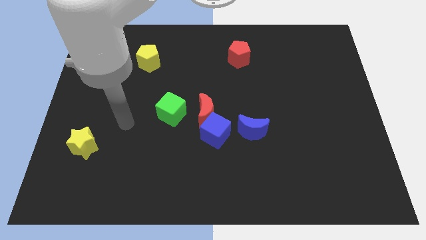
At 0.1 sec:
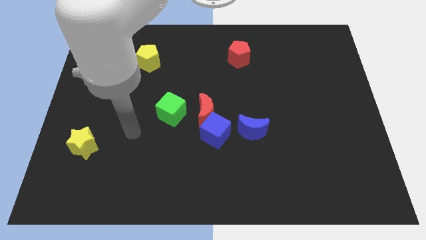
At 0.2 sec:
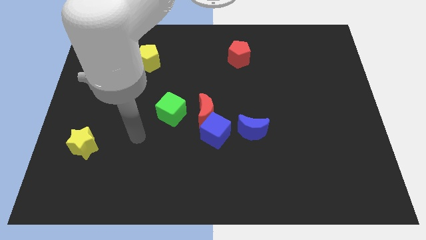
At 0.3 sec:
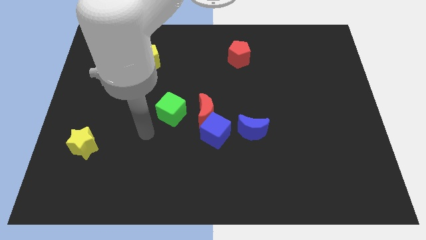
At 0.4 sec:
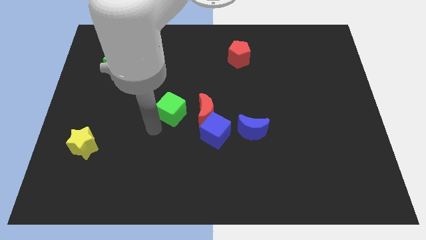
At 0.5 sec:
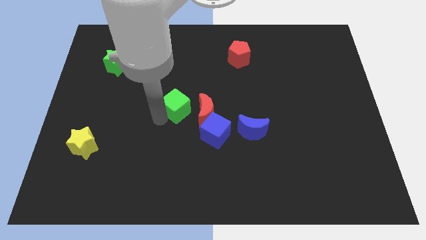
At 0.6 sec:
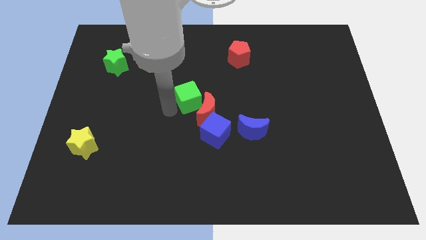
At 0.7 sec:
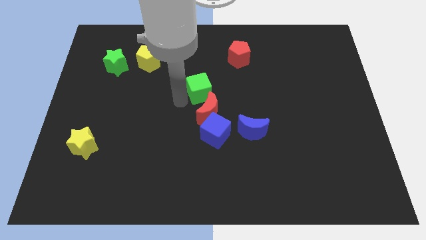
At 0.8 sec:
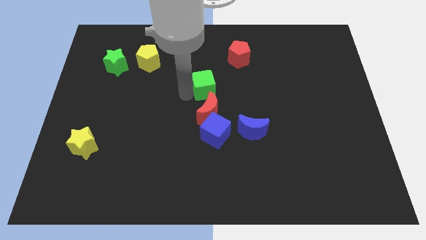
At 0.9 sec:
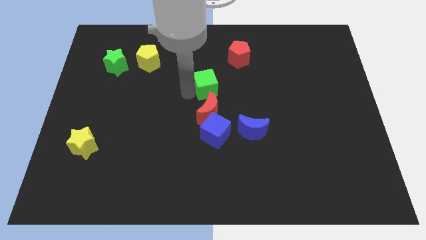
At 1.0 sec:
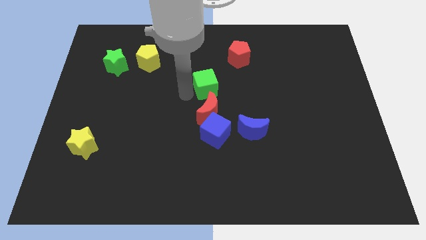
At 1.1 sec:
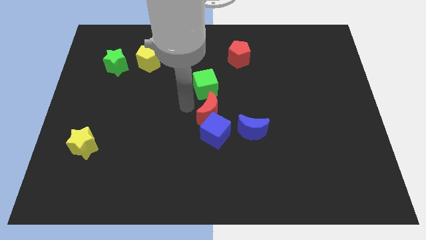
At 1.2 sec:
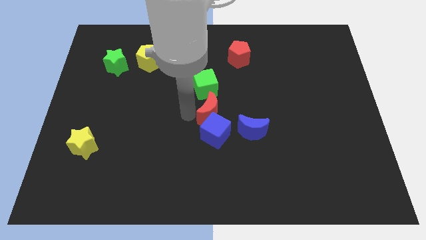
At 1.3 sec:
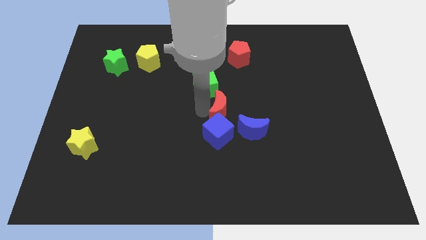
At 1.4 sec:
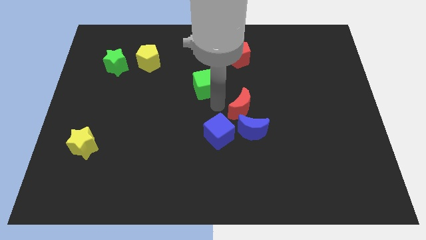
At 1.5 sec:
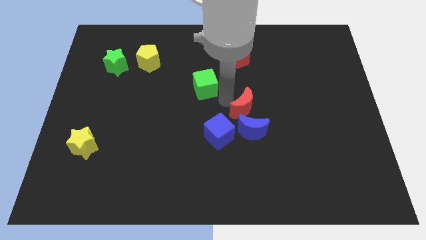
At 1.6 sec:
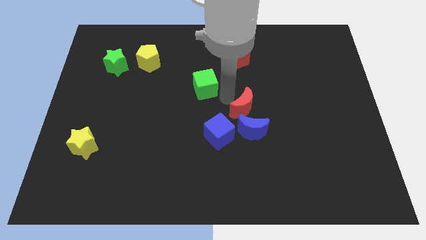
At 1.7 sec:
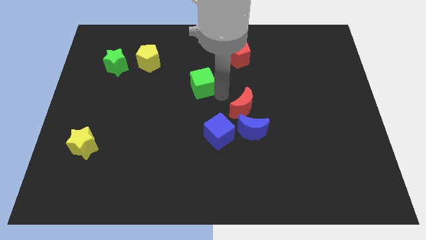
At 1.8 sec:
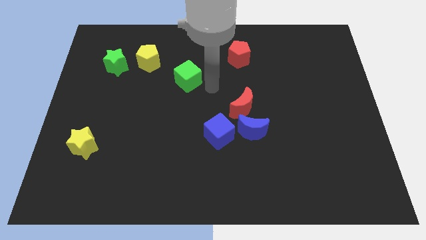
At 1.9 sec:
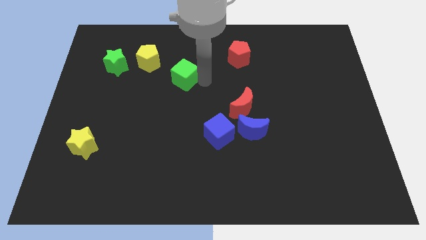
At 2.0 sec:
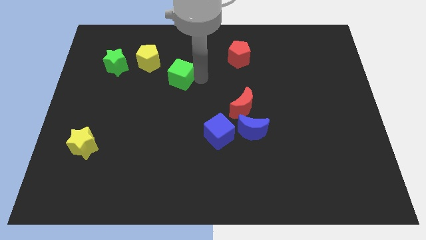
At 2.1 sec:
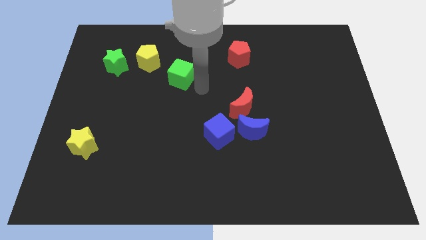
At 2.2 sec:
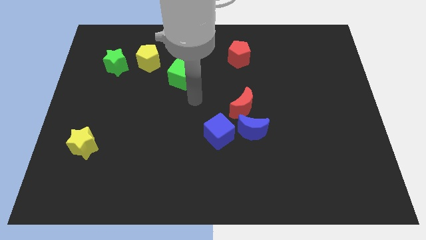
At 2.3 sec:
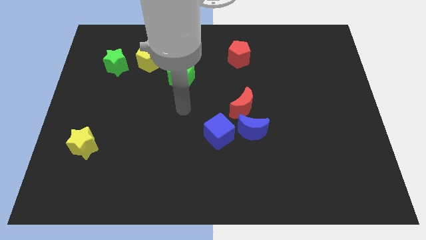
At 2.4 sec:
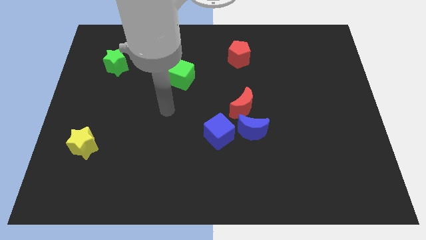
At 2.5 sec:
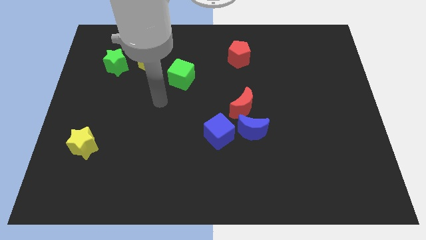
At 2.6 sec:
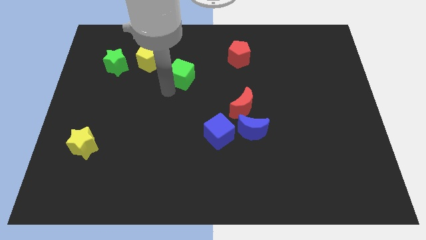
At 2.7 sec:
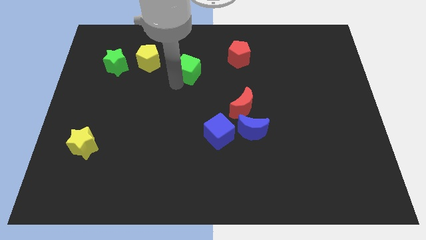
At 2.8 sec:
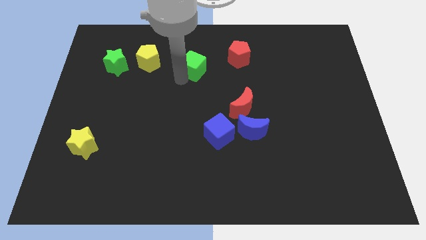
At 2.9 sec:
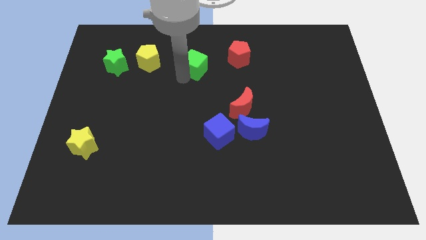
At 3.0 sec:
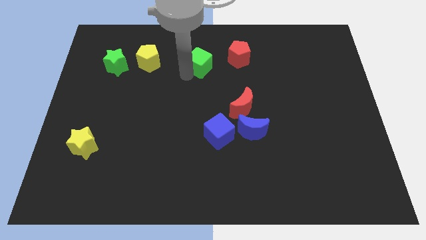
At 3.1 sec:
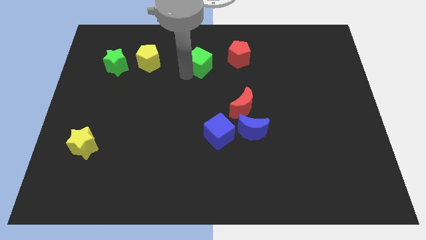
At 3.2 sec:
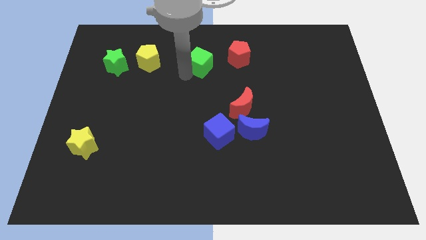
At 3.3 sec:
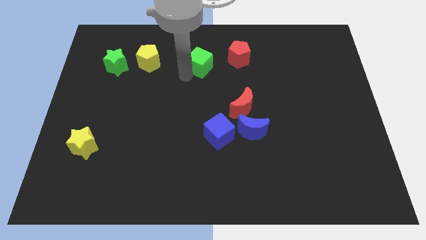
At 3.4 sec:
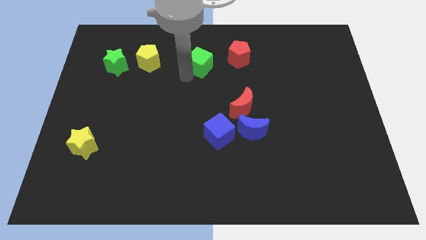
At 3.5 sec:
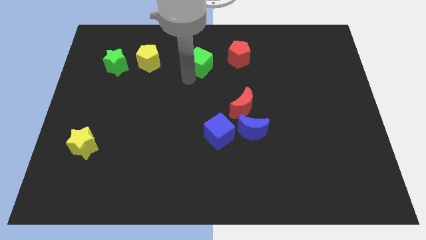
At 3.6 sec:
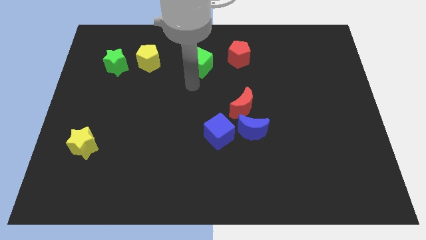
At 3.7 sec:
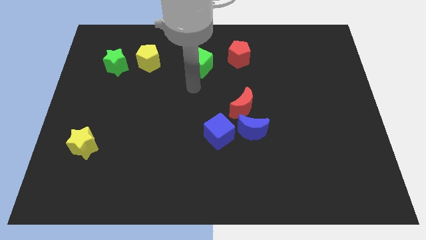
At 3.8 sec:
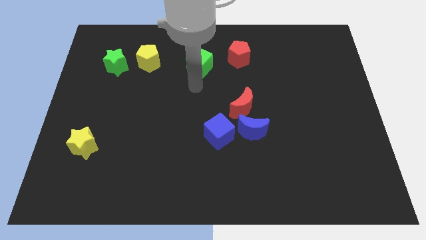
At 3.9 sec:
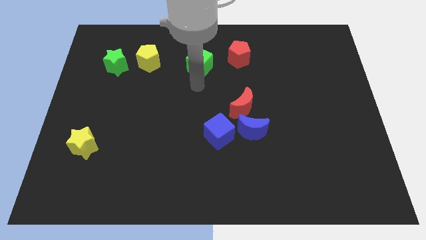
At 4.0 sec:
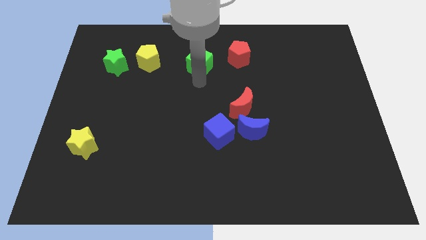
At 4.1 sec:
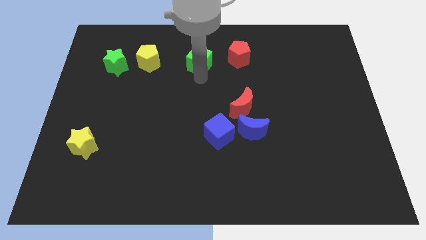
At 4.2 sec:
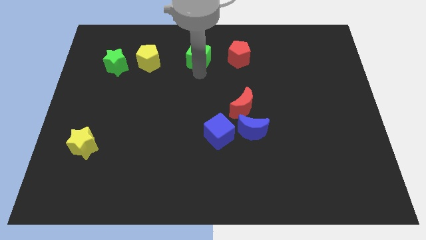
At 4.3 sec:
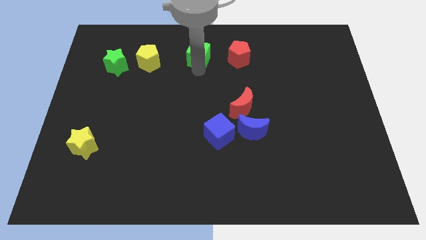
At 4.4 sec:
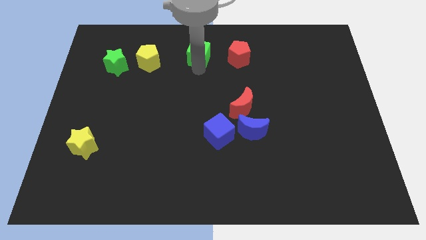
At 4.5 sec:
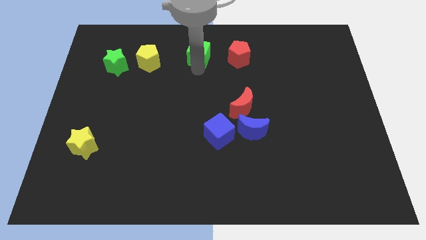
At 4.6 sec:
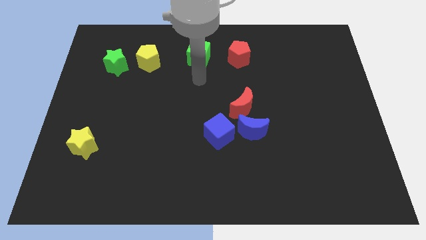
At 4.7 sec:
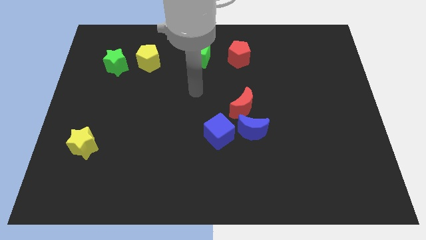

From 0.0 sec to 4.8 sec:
place the green cube in between red pentagon and yellow pentagon

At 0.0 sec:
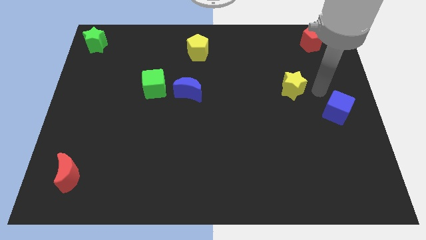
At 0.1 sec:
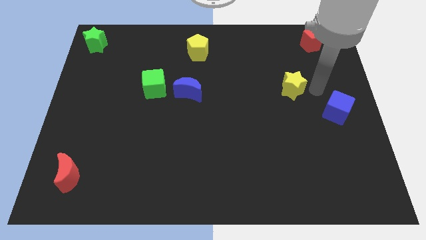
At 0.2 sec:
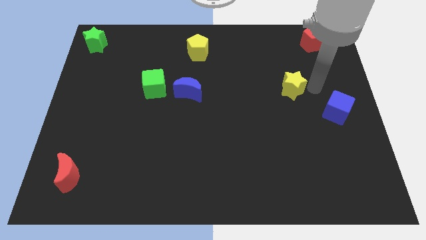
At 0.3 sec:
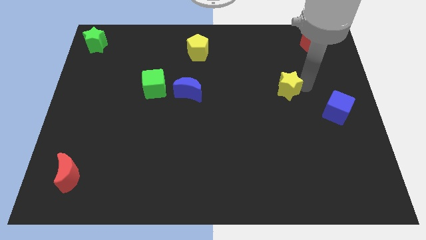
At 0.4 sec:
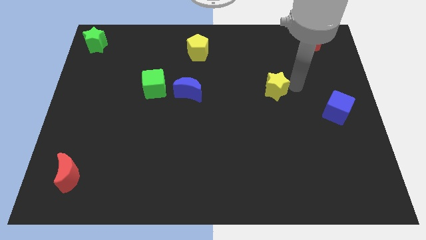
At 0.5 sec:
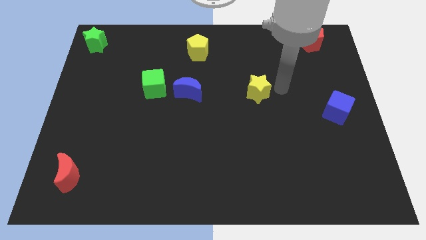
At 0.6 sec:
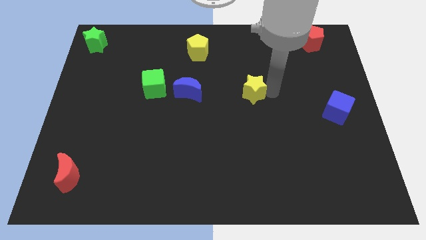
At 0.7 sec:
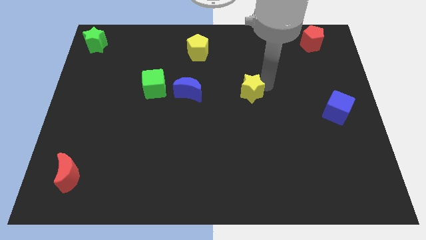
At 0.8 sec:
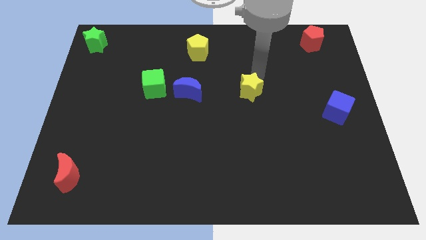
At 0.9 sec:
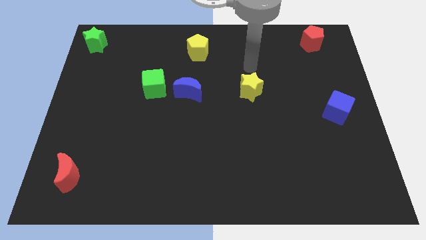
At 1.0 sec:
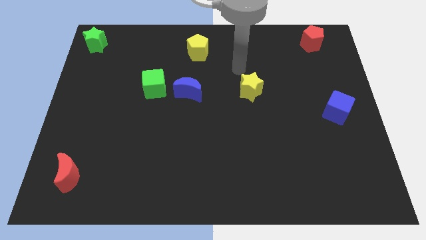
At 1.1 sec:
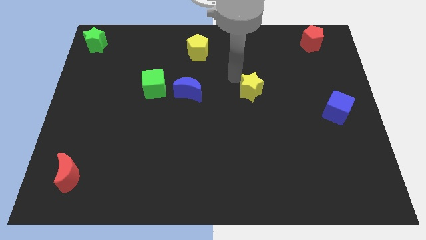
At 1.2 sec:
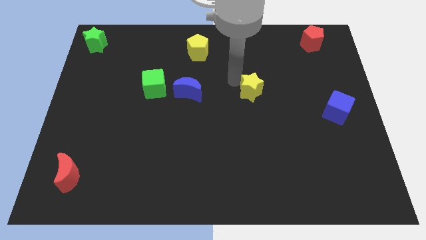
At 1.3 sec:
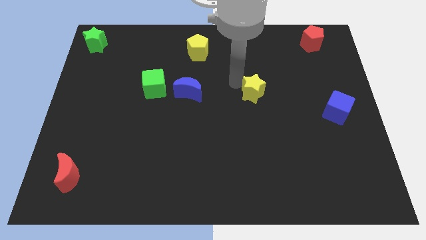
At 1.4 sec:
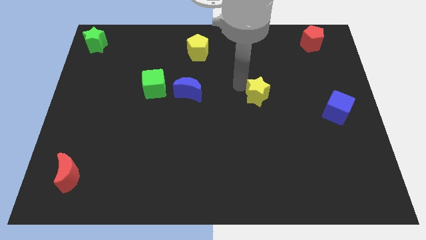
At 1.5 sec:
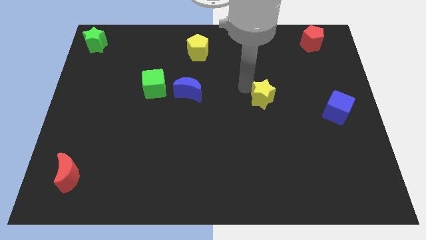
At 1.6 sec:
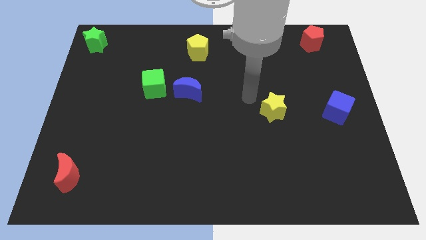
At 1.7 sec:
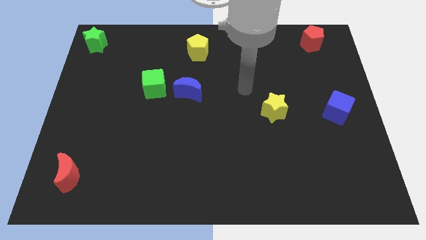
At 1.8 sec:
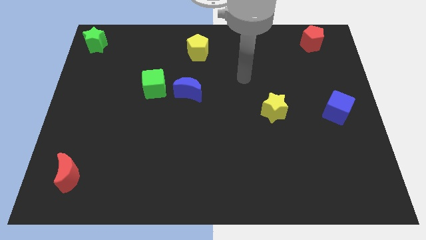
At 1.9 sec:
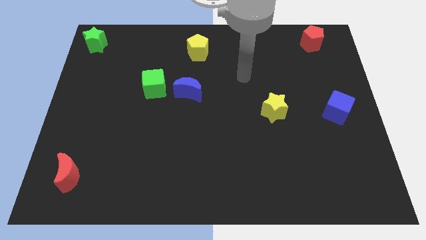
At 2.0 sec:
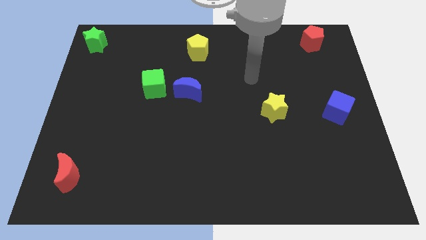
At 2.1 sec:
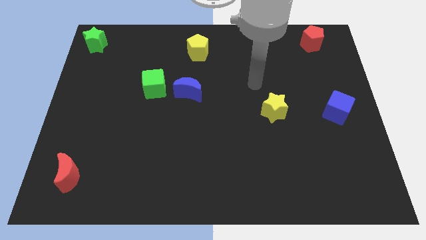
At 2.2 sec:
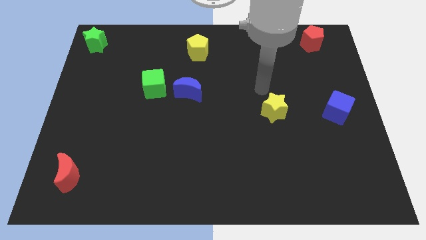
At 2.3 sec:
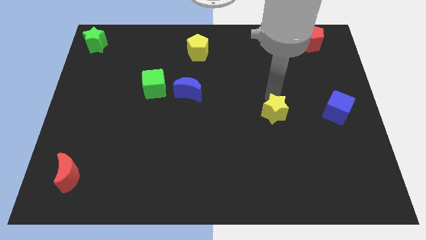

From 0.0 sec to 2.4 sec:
push the yellow star diagonal to the left of the blue cube

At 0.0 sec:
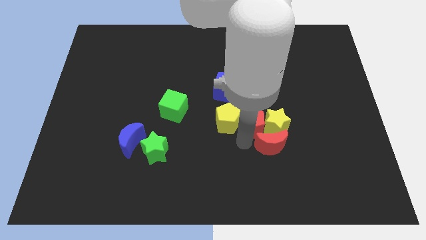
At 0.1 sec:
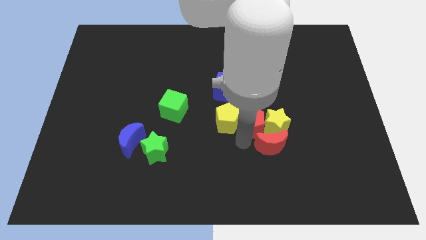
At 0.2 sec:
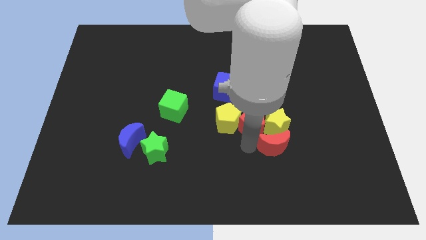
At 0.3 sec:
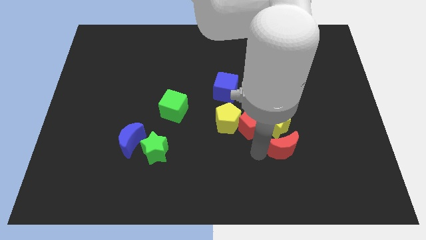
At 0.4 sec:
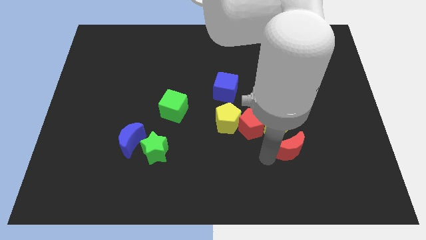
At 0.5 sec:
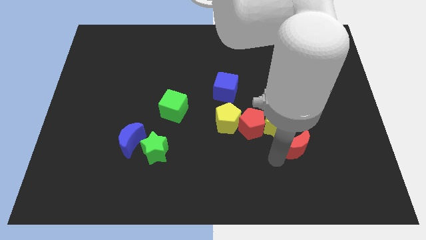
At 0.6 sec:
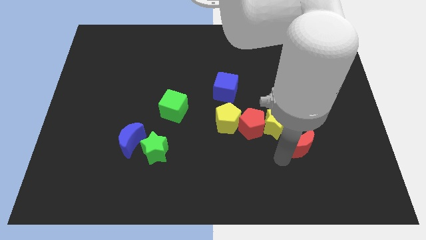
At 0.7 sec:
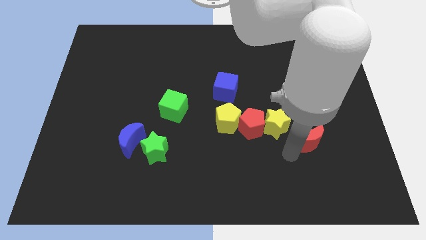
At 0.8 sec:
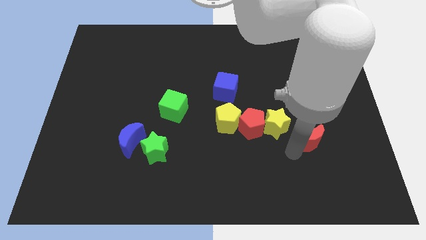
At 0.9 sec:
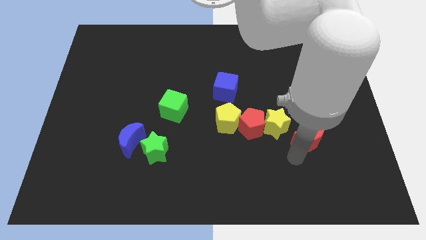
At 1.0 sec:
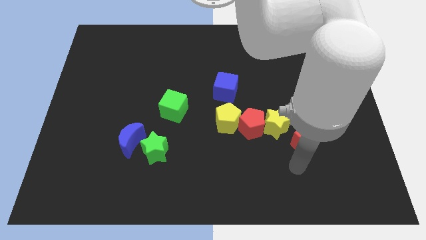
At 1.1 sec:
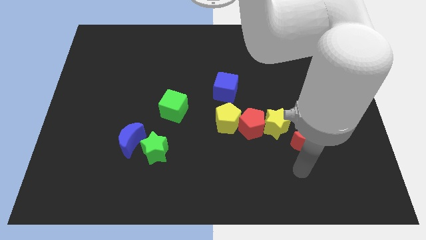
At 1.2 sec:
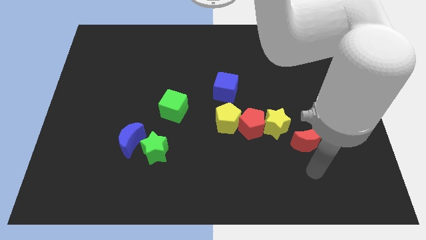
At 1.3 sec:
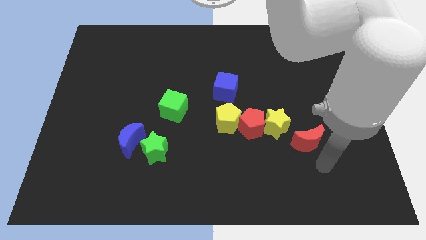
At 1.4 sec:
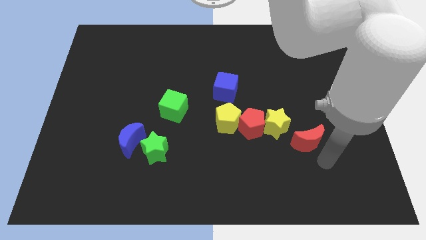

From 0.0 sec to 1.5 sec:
move the red crescent away from the red pentagon

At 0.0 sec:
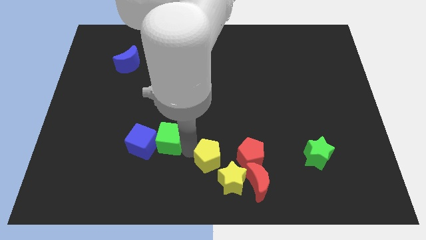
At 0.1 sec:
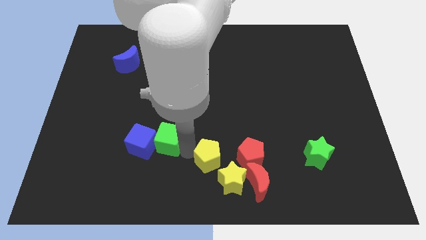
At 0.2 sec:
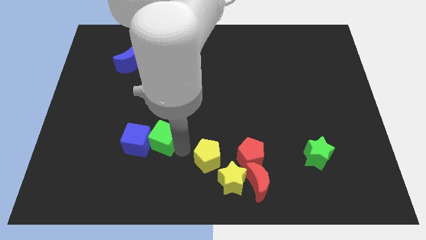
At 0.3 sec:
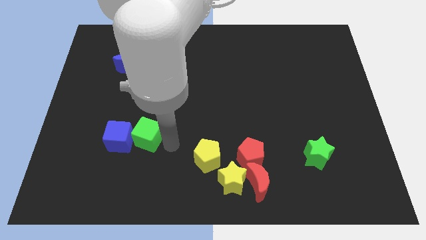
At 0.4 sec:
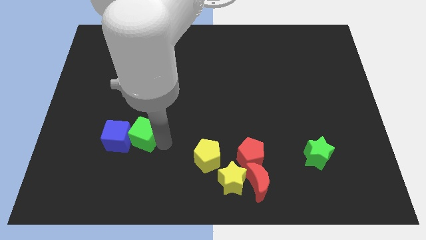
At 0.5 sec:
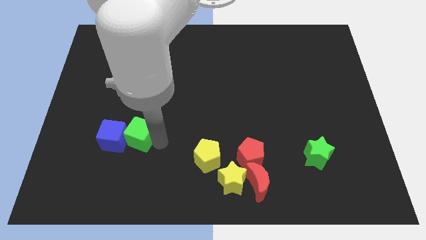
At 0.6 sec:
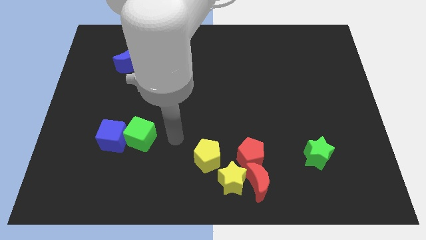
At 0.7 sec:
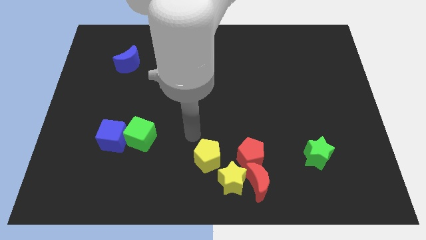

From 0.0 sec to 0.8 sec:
push green cube in to blue cube
